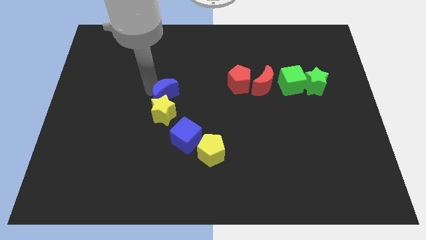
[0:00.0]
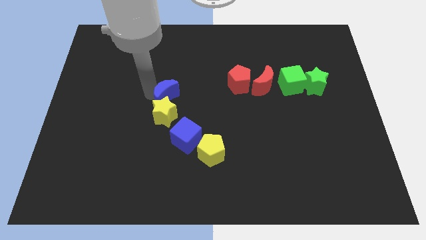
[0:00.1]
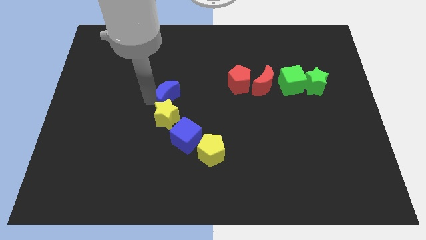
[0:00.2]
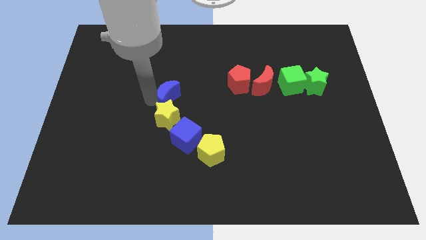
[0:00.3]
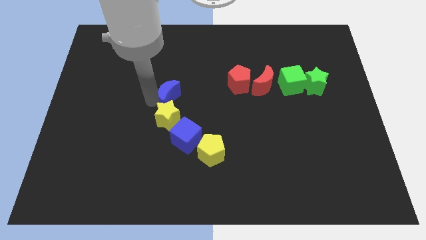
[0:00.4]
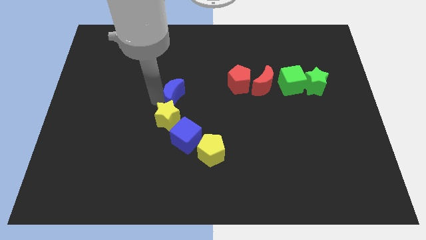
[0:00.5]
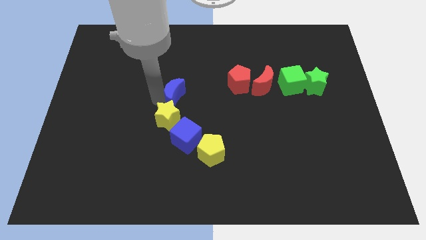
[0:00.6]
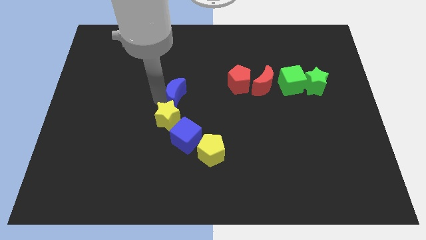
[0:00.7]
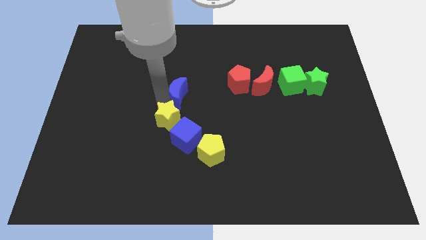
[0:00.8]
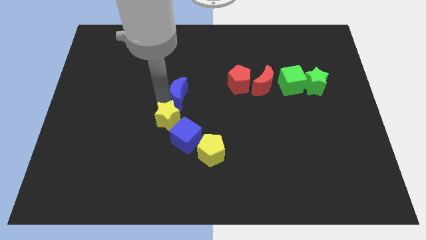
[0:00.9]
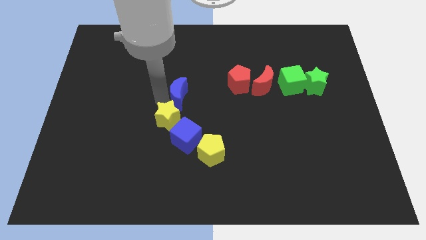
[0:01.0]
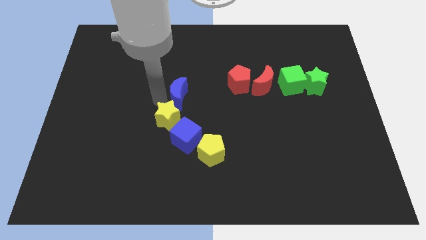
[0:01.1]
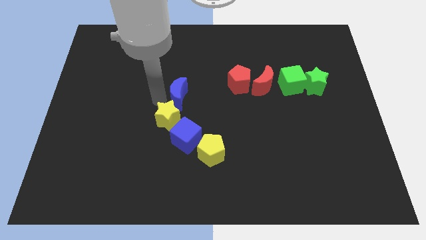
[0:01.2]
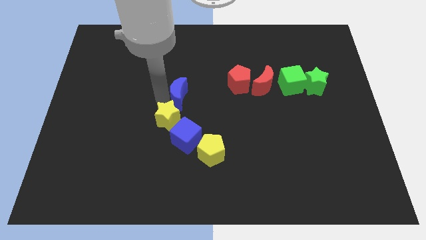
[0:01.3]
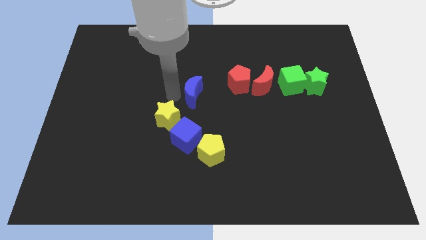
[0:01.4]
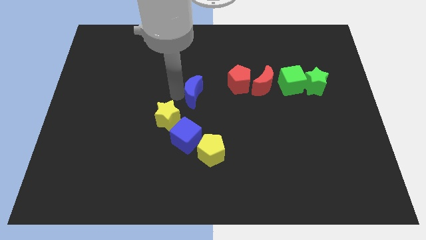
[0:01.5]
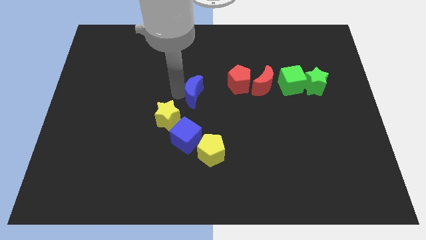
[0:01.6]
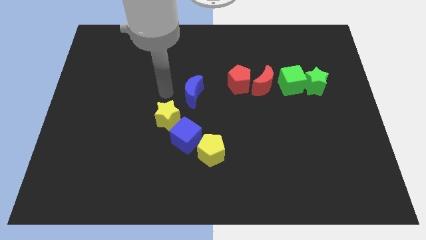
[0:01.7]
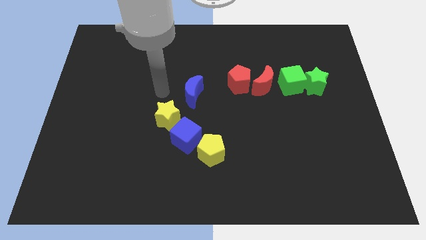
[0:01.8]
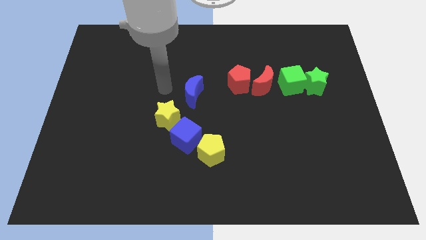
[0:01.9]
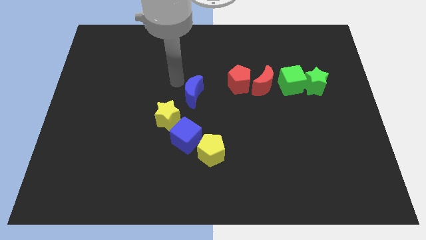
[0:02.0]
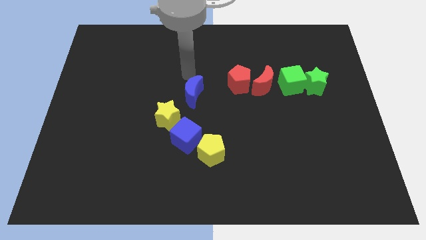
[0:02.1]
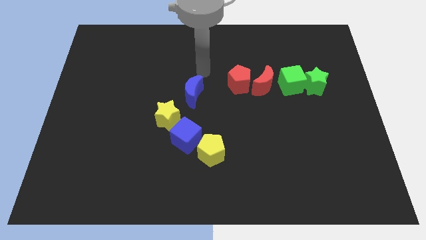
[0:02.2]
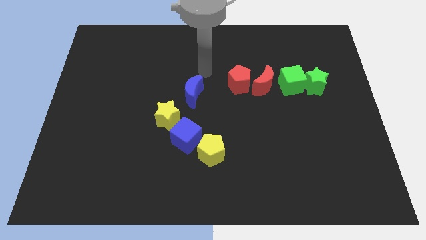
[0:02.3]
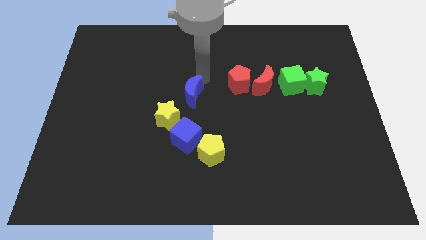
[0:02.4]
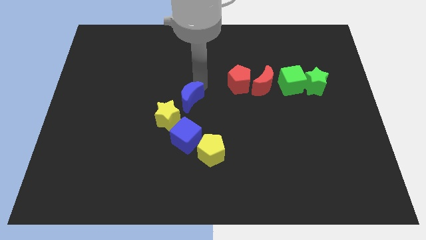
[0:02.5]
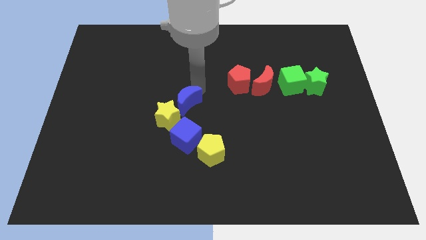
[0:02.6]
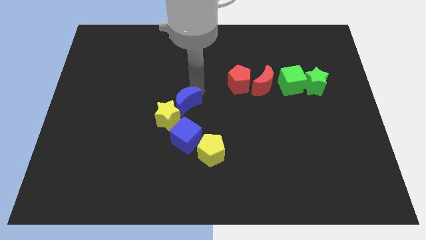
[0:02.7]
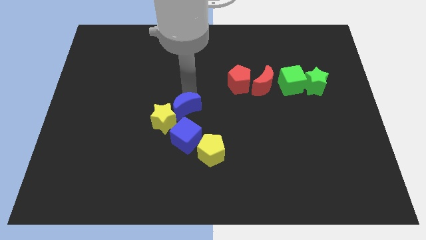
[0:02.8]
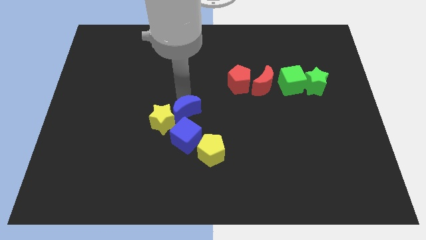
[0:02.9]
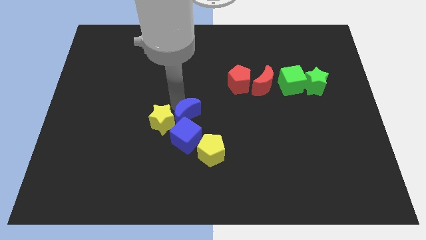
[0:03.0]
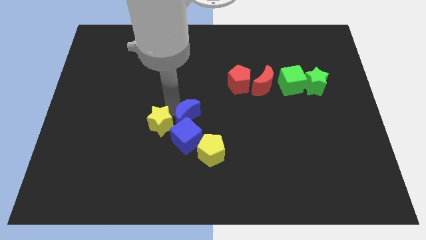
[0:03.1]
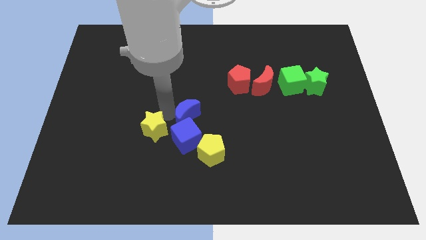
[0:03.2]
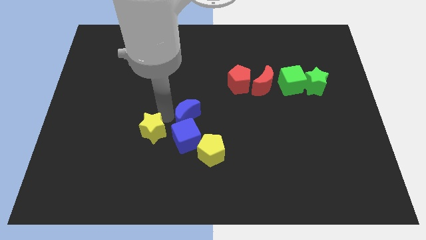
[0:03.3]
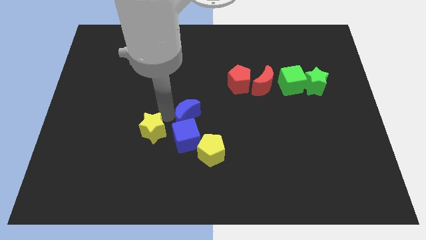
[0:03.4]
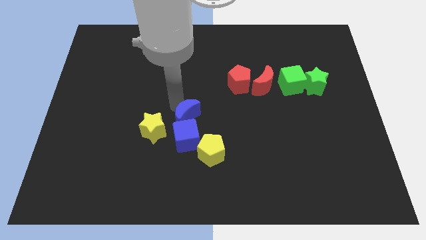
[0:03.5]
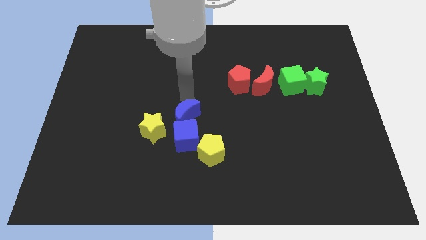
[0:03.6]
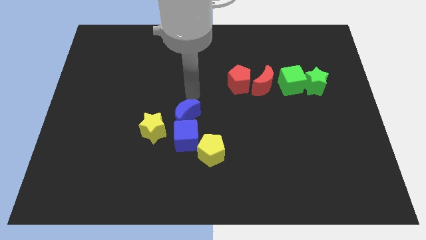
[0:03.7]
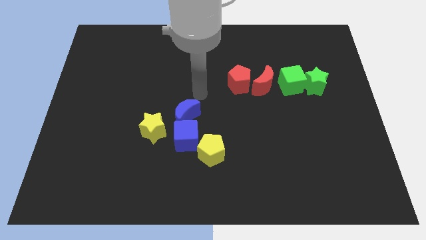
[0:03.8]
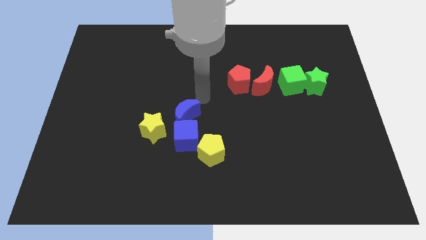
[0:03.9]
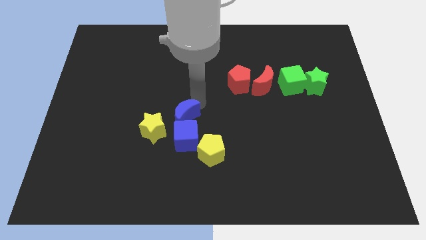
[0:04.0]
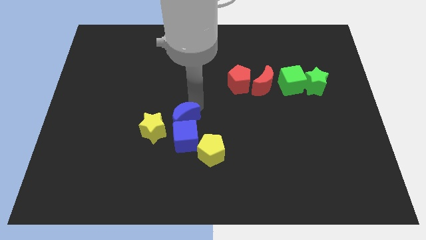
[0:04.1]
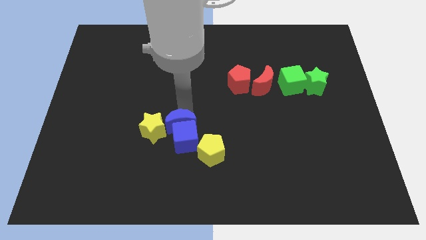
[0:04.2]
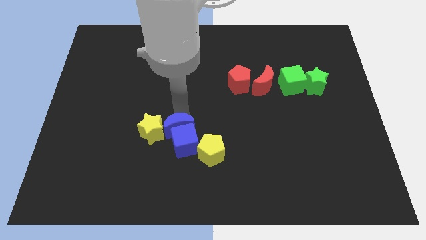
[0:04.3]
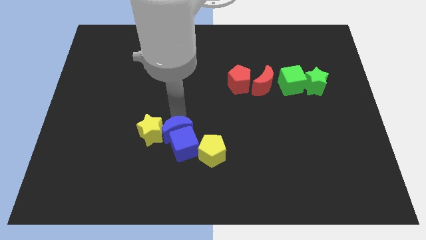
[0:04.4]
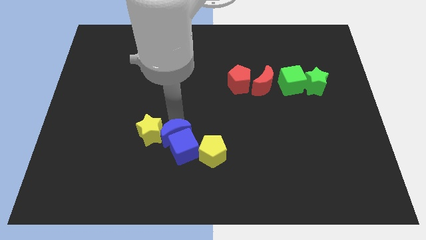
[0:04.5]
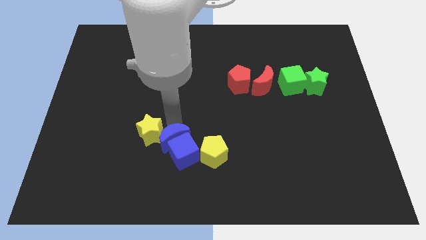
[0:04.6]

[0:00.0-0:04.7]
push the blue moon into the blue cube

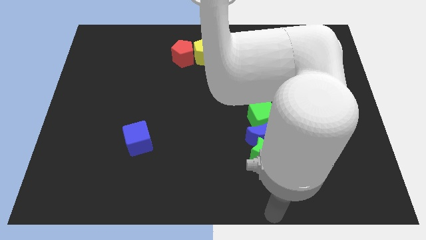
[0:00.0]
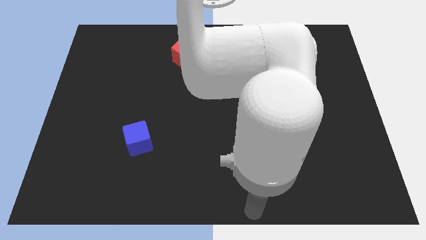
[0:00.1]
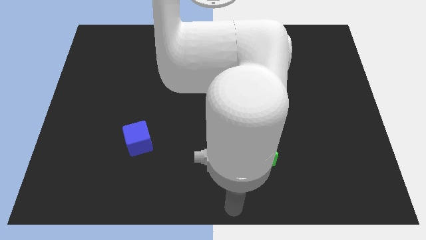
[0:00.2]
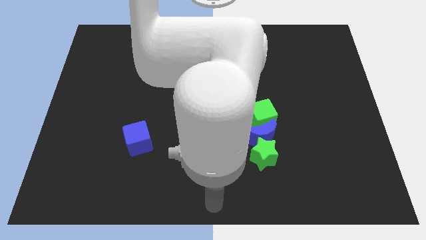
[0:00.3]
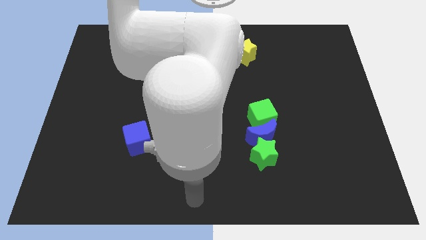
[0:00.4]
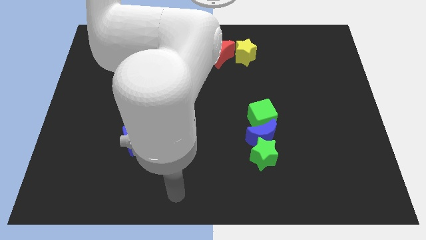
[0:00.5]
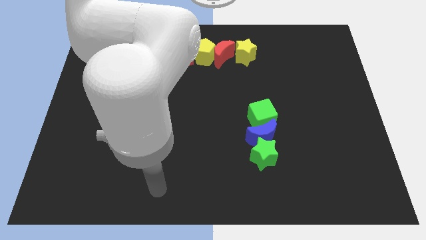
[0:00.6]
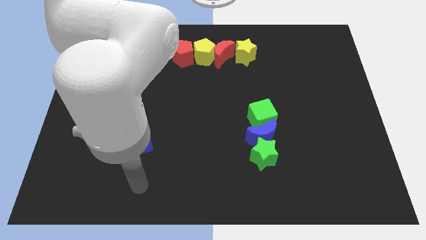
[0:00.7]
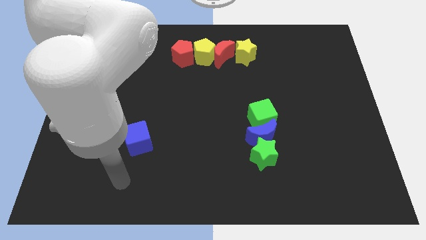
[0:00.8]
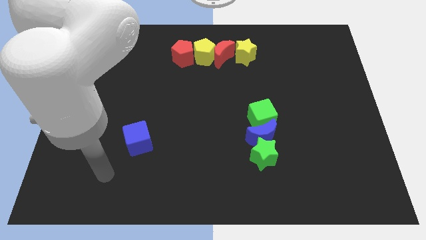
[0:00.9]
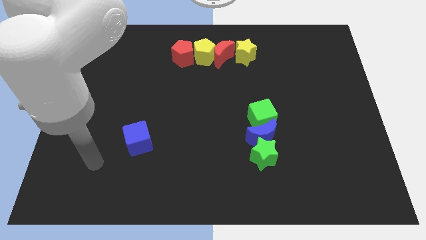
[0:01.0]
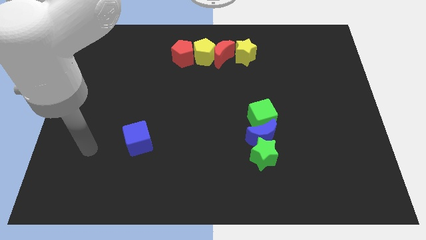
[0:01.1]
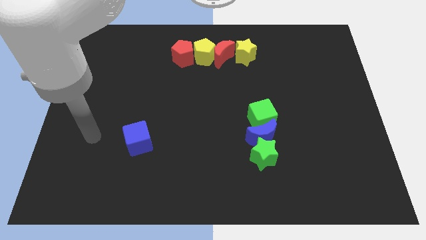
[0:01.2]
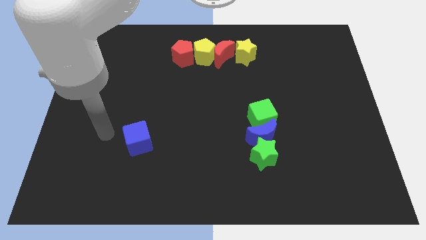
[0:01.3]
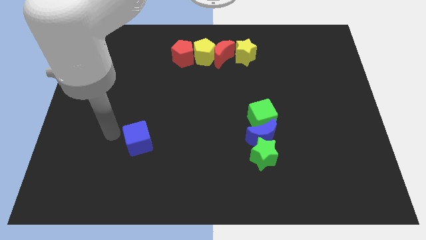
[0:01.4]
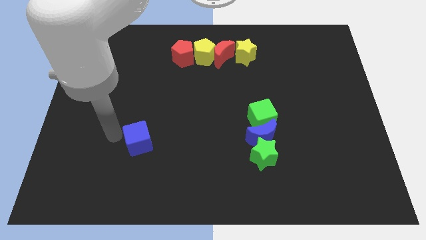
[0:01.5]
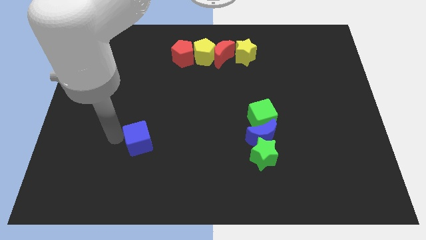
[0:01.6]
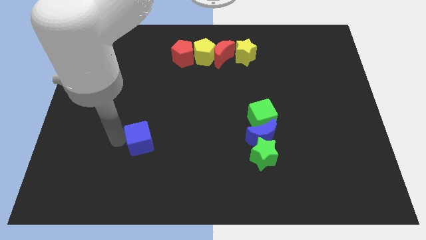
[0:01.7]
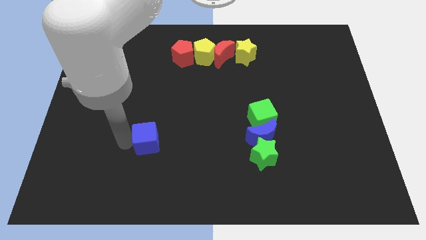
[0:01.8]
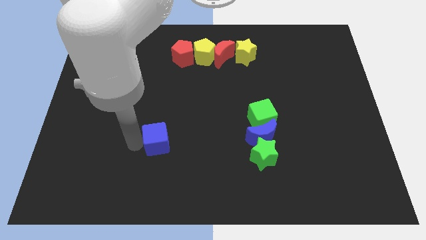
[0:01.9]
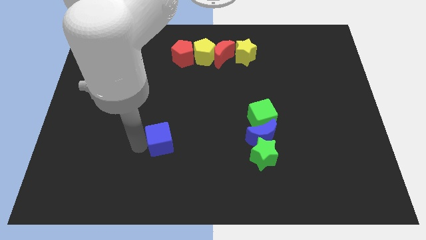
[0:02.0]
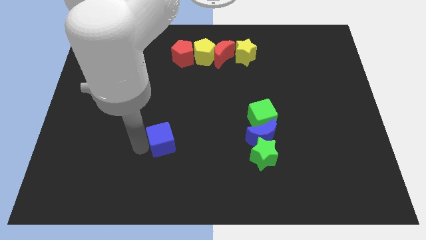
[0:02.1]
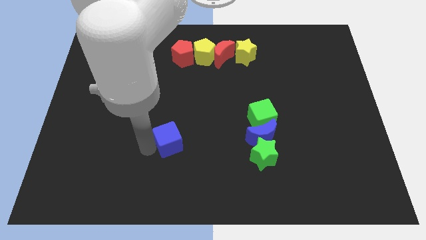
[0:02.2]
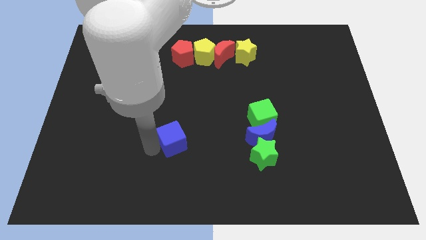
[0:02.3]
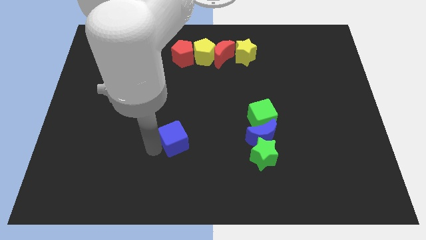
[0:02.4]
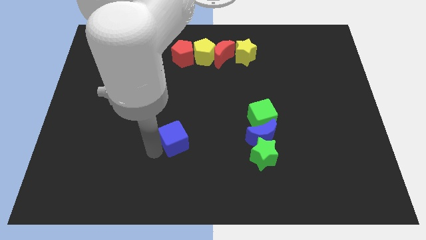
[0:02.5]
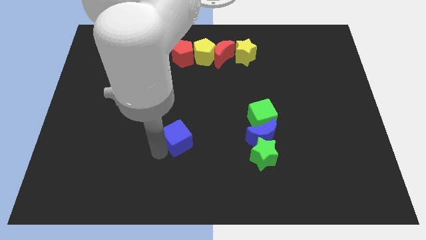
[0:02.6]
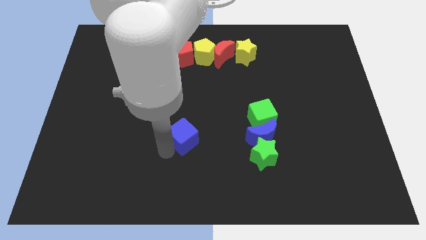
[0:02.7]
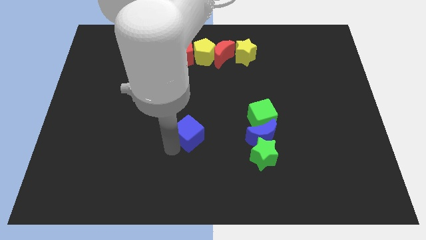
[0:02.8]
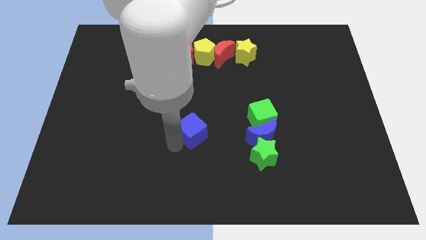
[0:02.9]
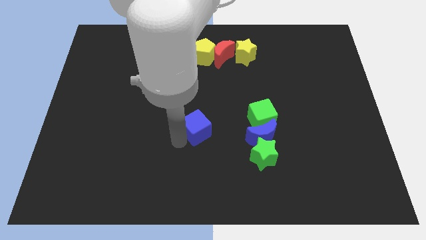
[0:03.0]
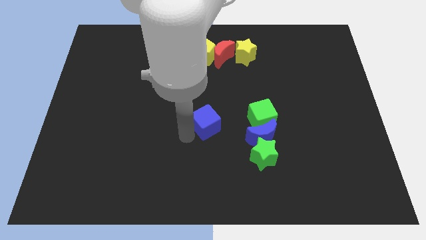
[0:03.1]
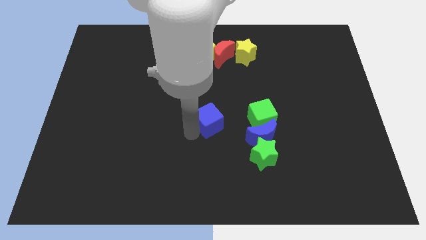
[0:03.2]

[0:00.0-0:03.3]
push the blue cube closer to the blue moon

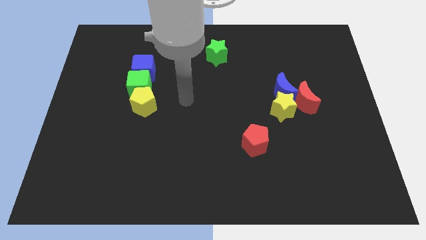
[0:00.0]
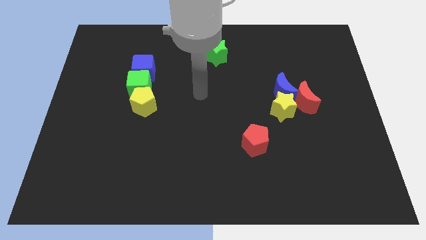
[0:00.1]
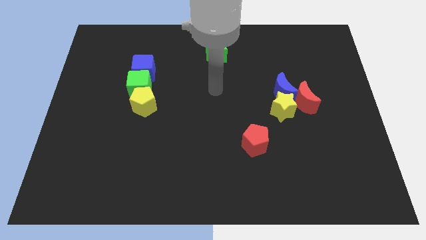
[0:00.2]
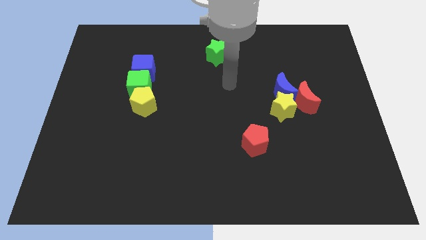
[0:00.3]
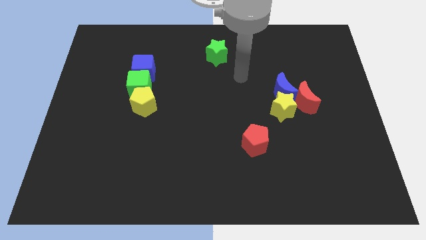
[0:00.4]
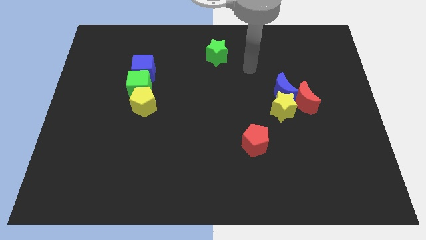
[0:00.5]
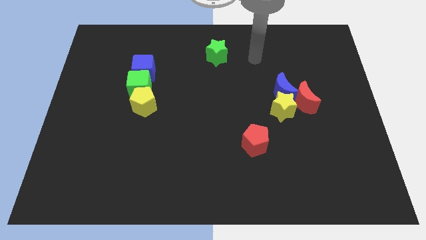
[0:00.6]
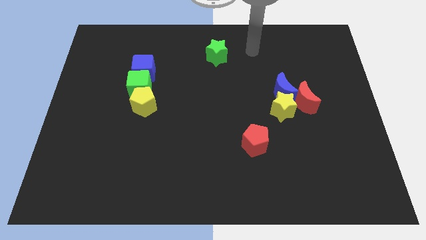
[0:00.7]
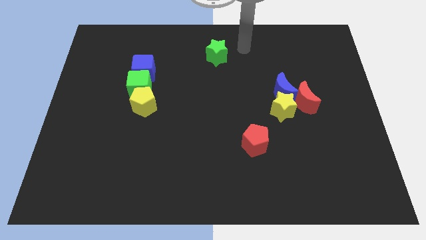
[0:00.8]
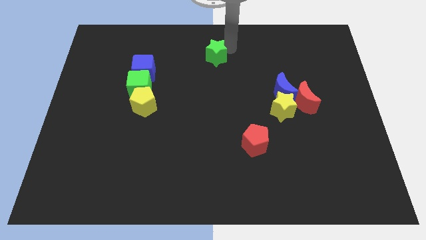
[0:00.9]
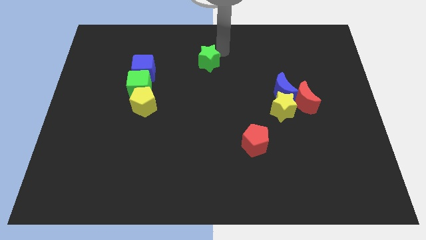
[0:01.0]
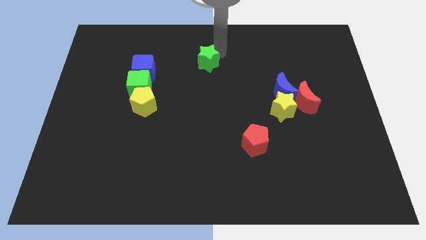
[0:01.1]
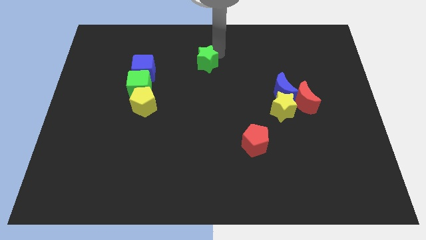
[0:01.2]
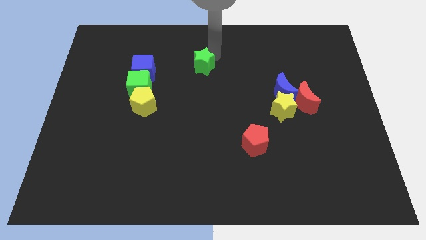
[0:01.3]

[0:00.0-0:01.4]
push the green star towards the down of the board
